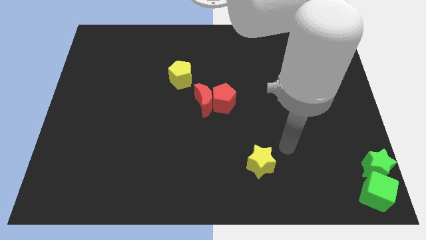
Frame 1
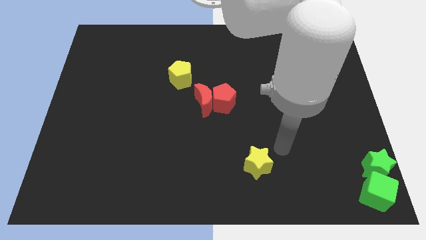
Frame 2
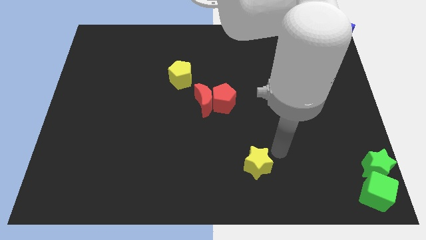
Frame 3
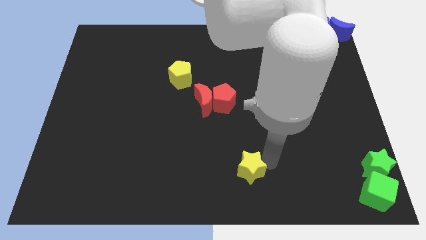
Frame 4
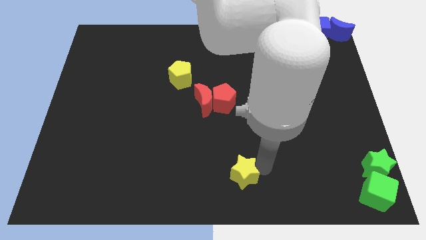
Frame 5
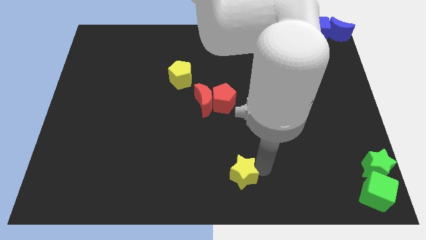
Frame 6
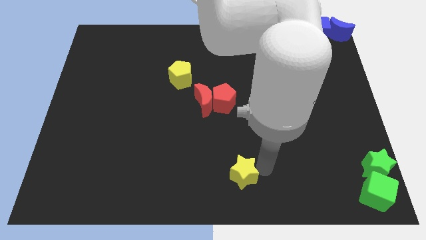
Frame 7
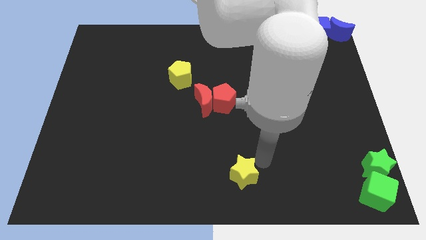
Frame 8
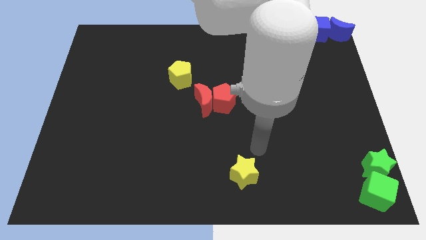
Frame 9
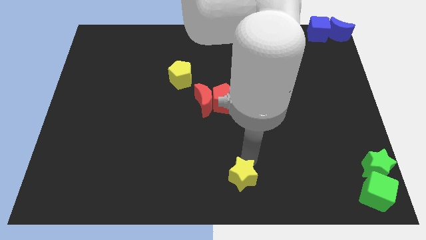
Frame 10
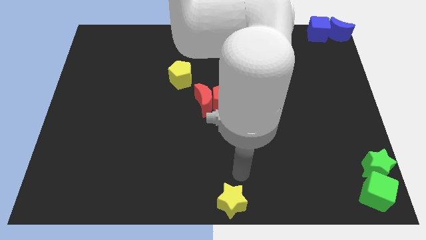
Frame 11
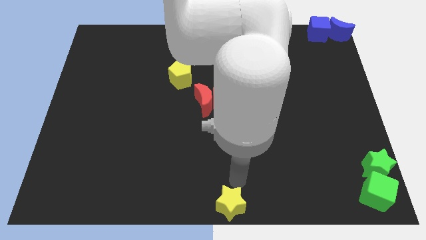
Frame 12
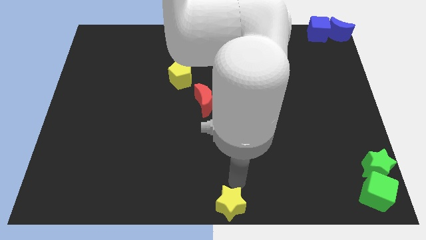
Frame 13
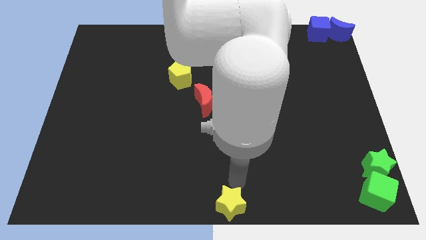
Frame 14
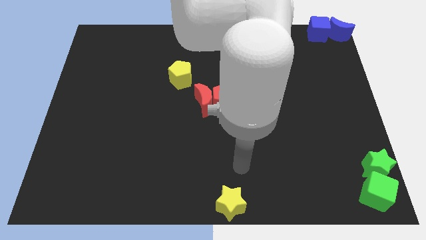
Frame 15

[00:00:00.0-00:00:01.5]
move the yellow star to the bottom center of the board

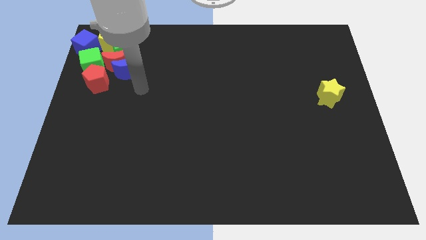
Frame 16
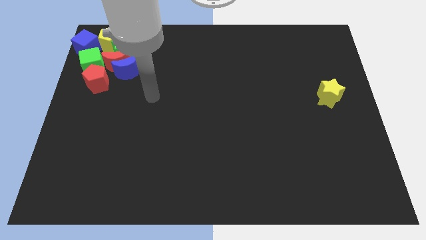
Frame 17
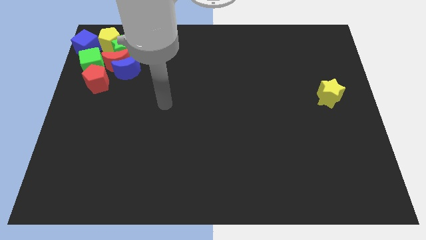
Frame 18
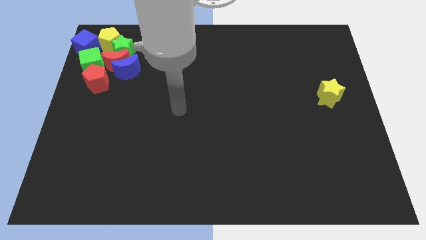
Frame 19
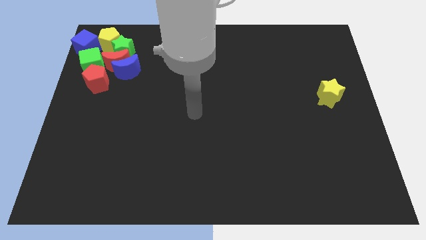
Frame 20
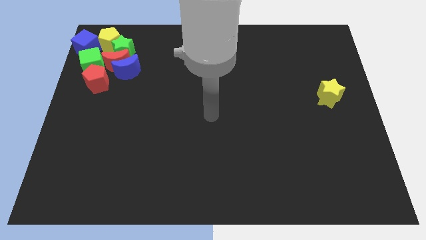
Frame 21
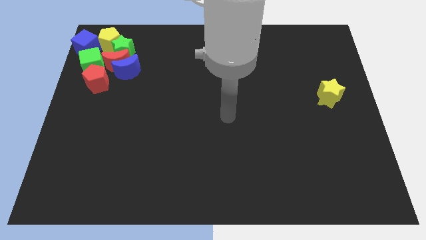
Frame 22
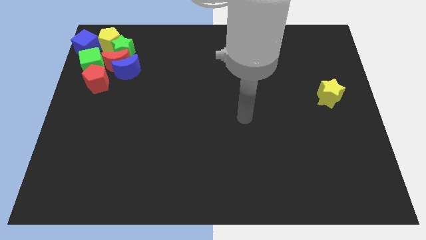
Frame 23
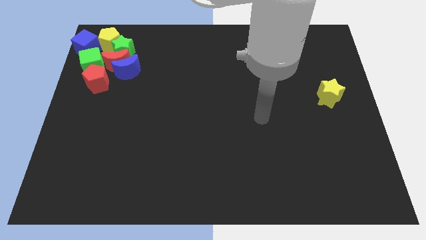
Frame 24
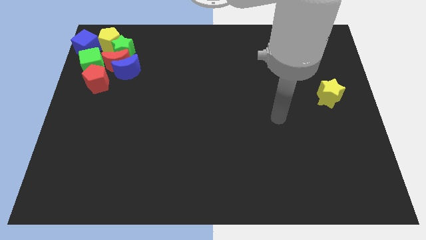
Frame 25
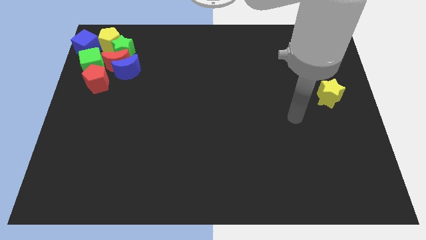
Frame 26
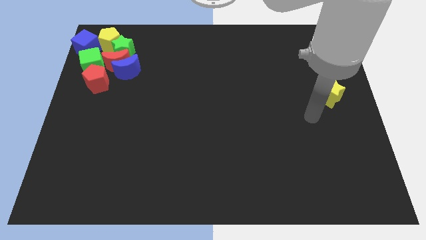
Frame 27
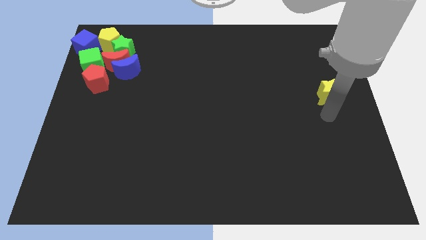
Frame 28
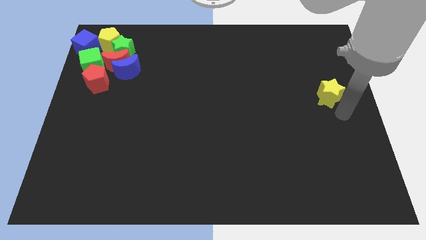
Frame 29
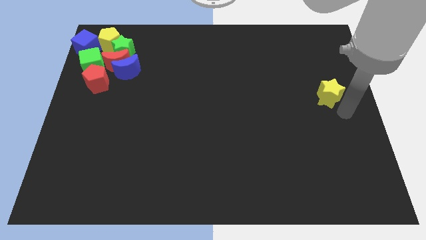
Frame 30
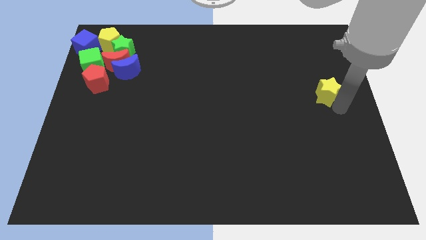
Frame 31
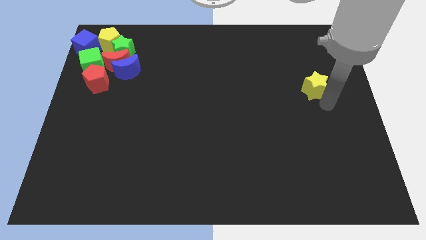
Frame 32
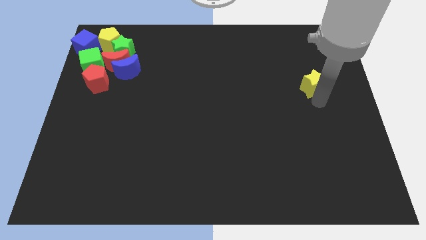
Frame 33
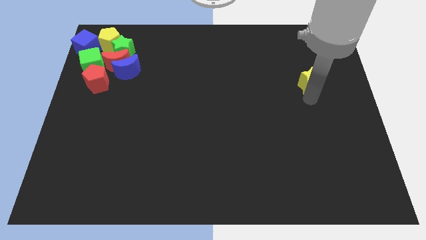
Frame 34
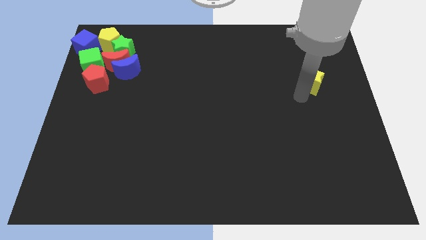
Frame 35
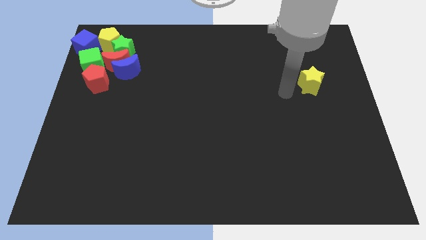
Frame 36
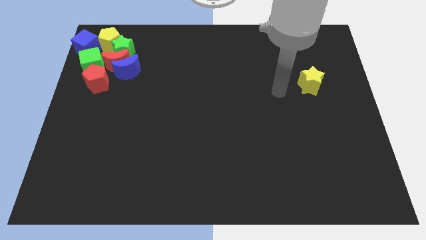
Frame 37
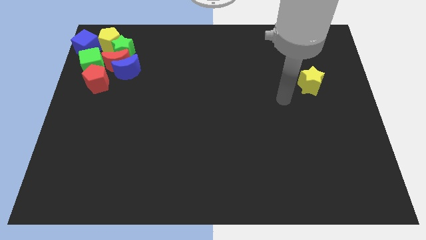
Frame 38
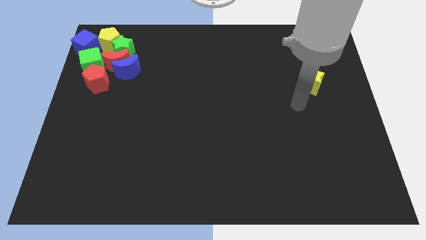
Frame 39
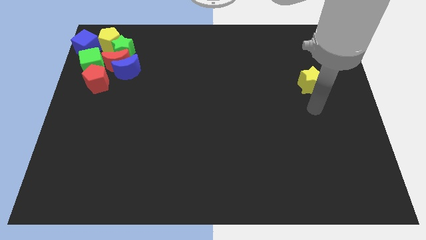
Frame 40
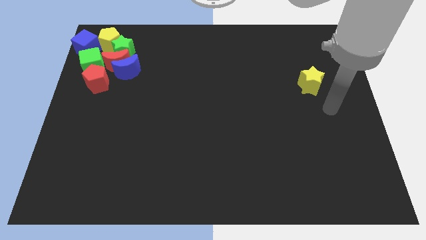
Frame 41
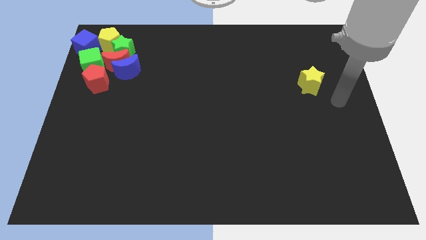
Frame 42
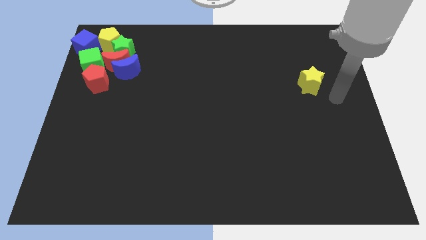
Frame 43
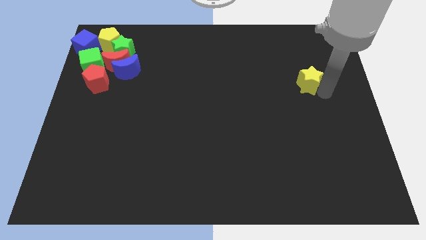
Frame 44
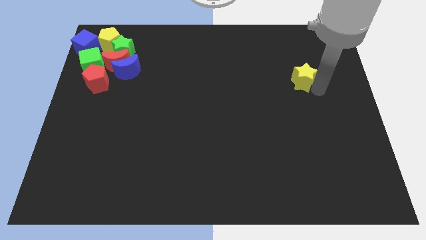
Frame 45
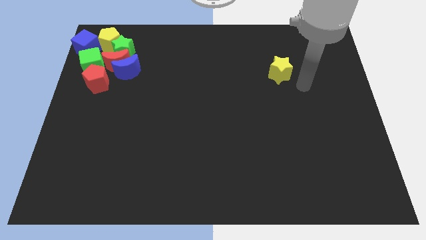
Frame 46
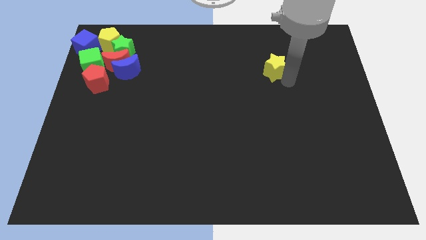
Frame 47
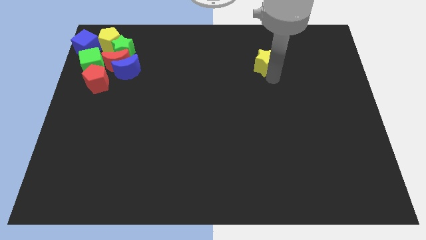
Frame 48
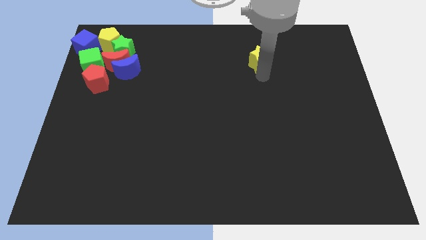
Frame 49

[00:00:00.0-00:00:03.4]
slide the yellow star towards the top side of the table

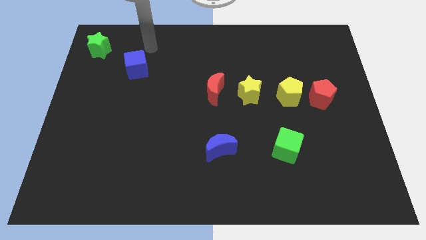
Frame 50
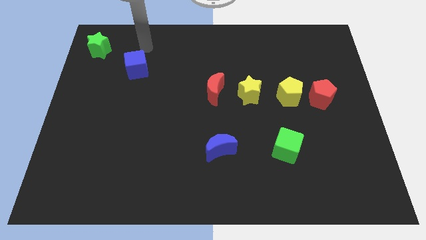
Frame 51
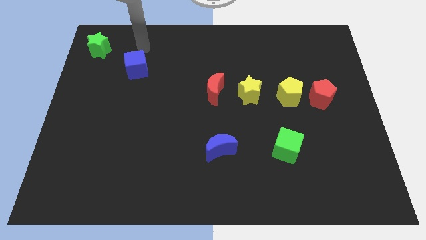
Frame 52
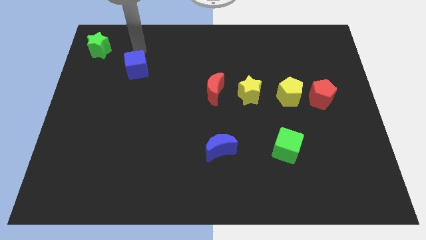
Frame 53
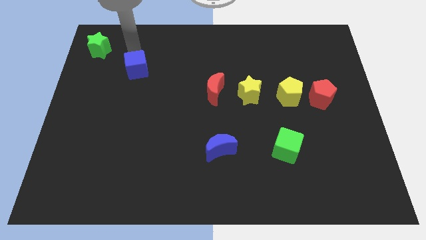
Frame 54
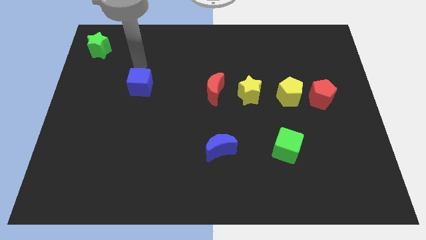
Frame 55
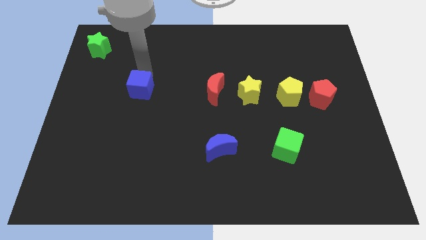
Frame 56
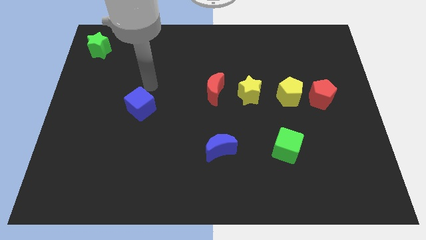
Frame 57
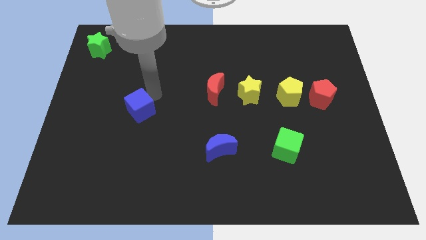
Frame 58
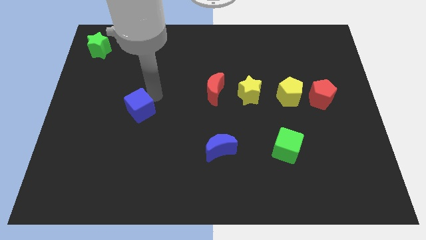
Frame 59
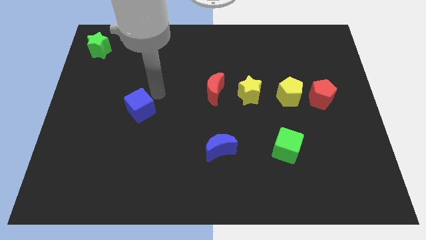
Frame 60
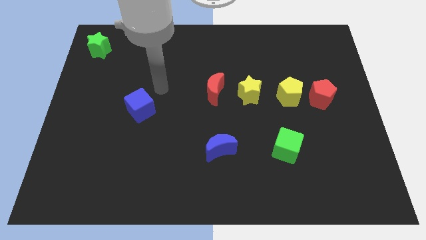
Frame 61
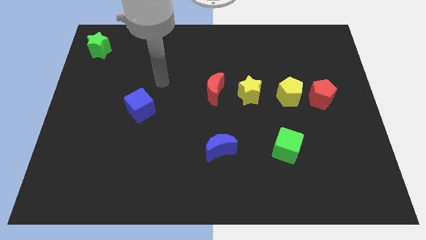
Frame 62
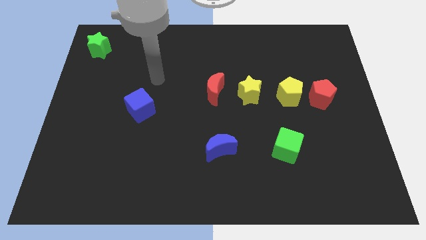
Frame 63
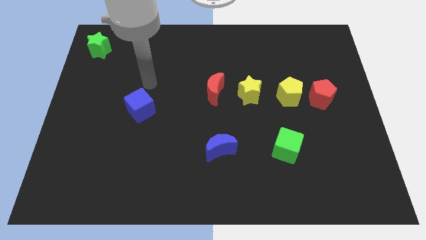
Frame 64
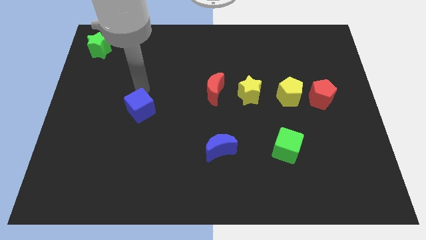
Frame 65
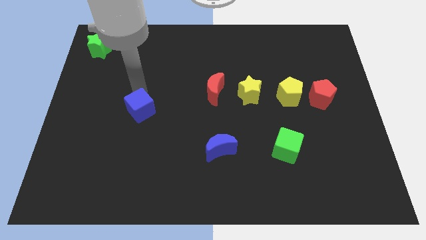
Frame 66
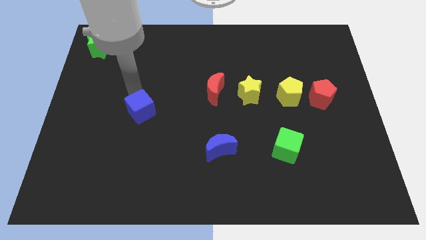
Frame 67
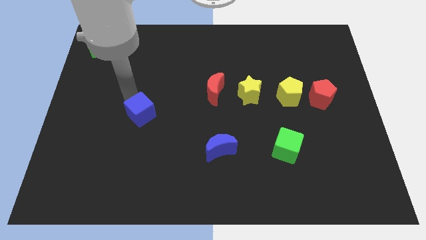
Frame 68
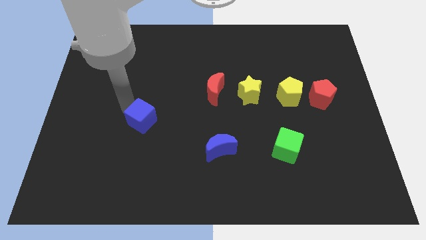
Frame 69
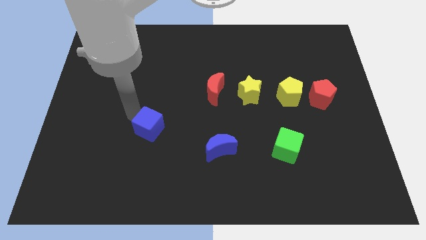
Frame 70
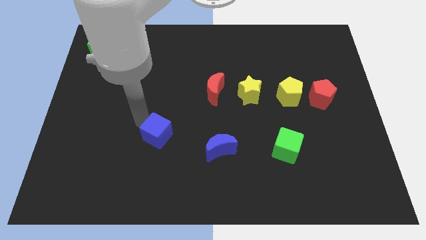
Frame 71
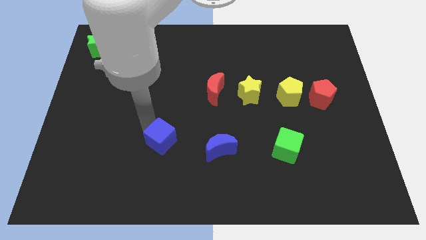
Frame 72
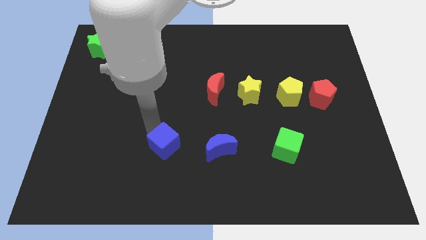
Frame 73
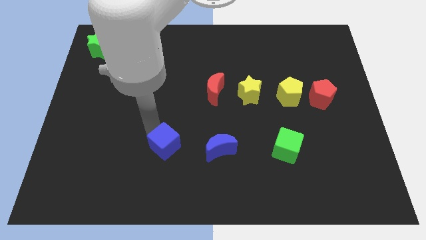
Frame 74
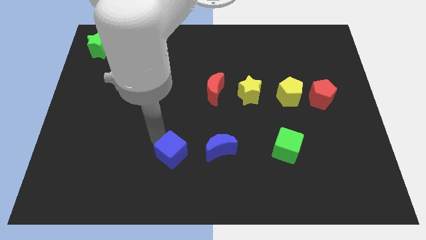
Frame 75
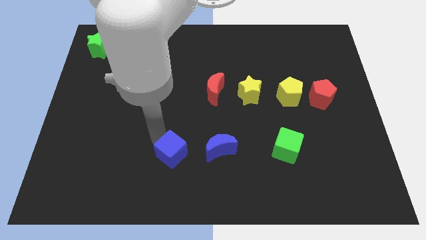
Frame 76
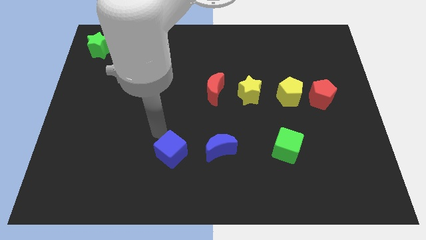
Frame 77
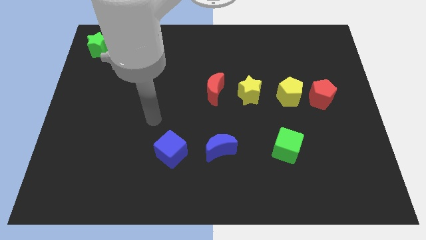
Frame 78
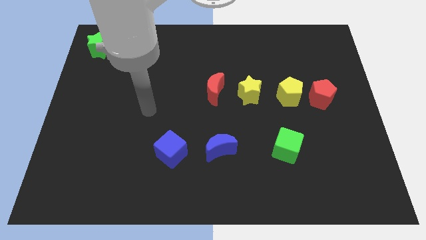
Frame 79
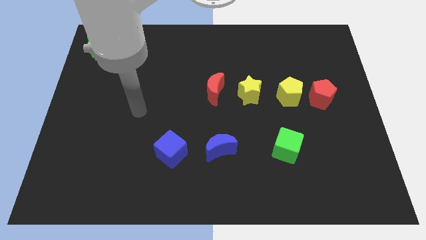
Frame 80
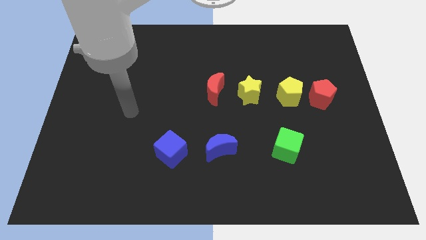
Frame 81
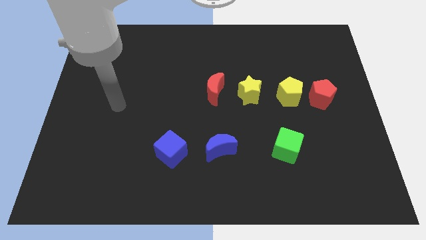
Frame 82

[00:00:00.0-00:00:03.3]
move the blue cube left to the blue moon

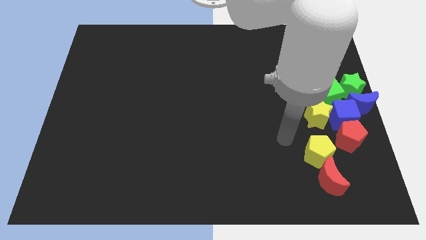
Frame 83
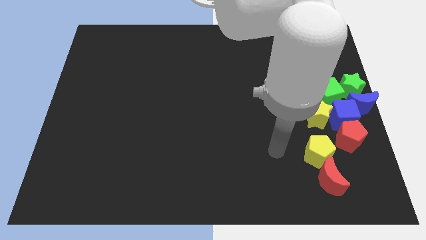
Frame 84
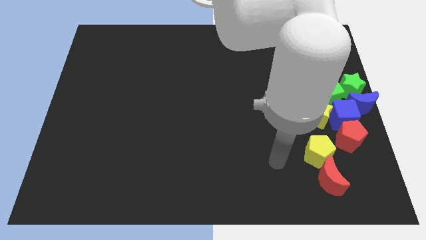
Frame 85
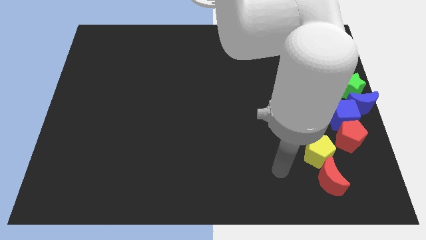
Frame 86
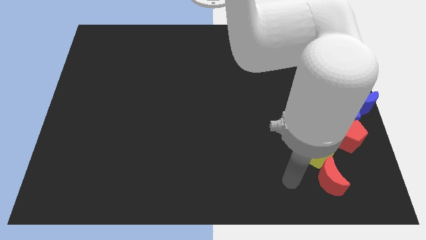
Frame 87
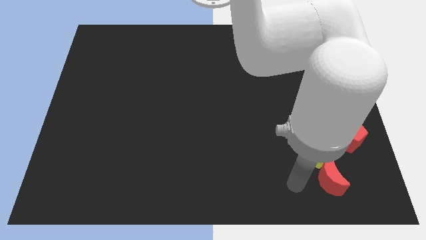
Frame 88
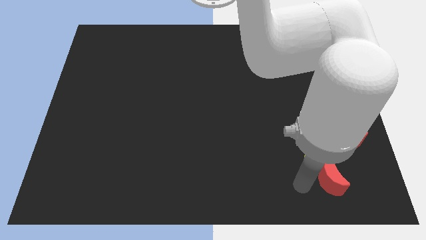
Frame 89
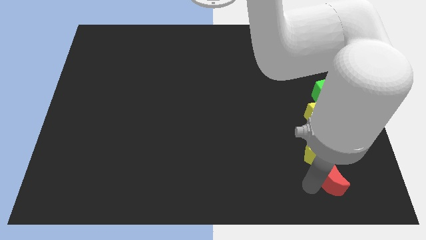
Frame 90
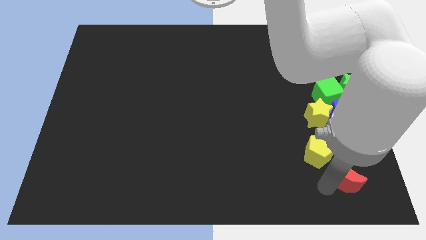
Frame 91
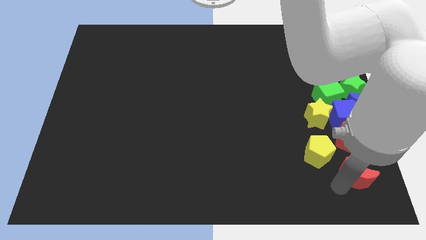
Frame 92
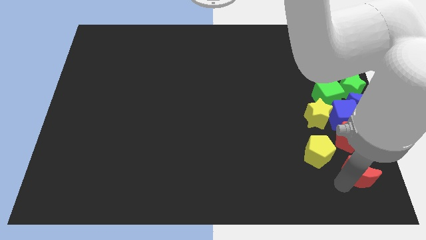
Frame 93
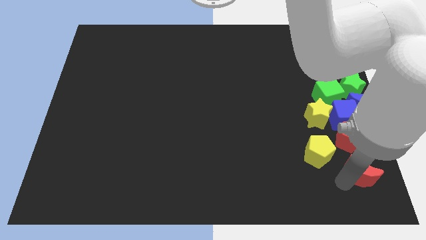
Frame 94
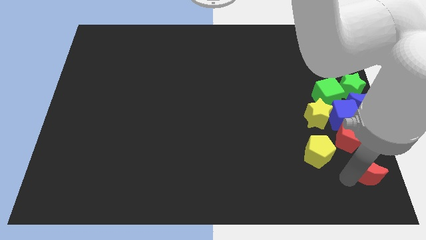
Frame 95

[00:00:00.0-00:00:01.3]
adjust the red moon below the red pentagon
